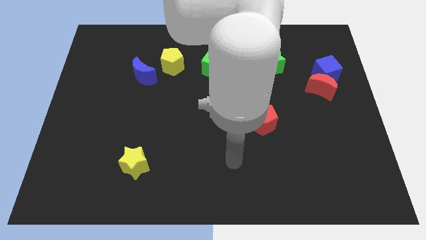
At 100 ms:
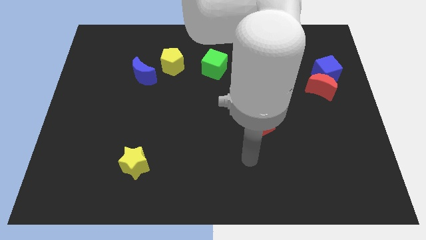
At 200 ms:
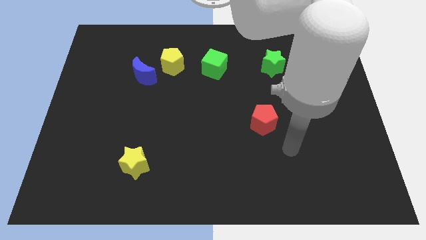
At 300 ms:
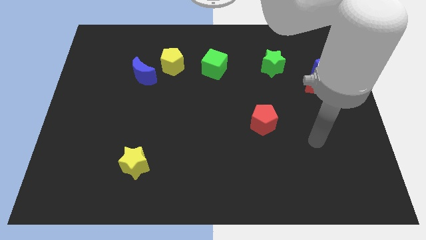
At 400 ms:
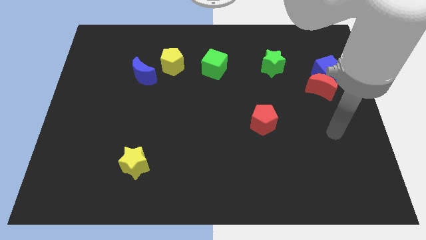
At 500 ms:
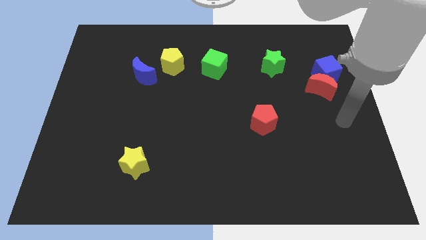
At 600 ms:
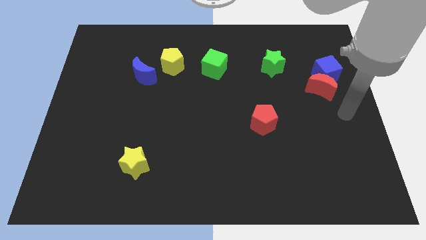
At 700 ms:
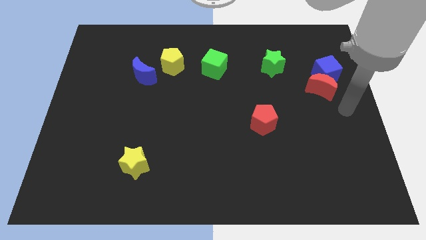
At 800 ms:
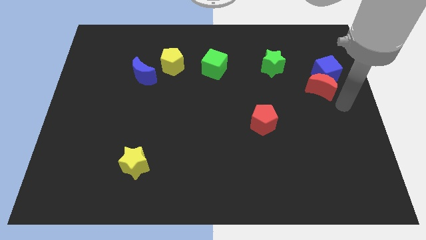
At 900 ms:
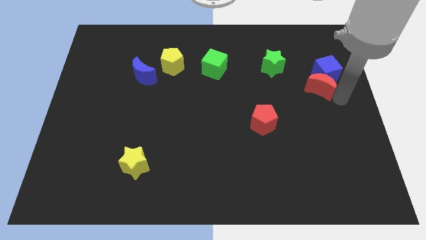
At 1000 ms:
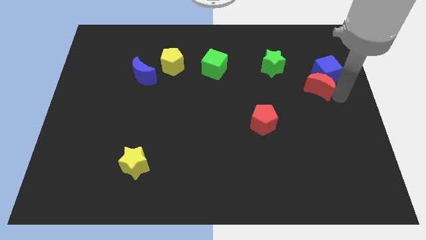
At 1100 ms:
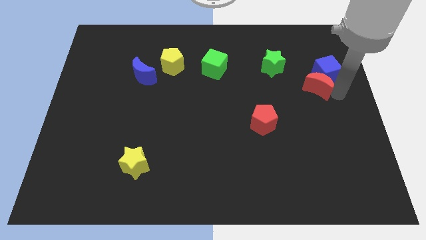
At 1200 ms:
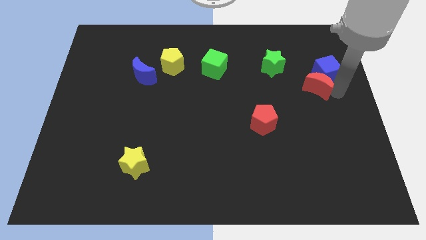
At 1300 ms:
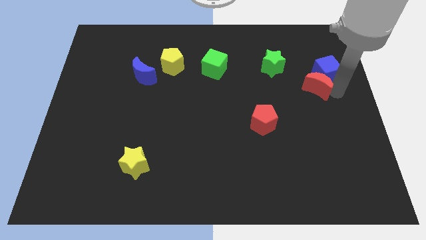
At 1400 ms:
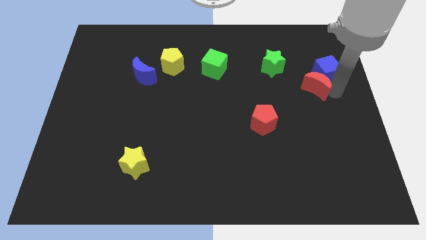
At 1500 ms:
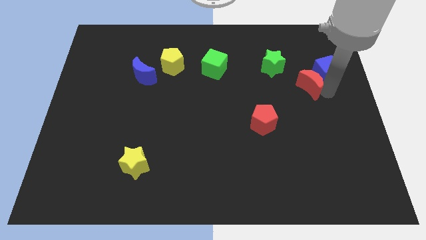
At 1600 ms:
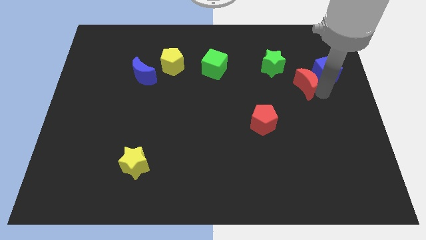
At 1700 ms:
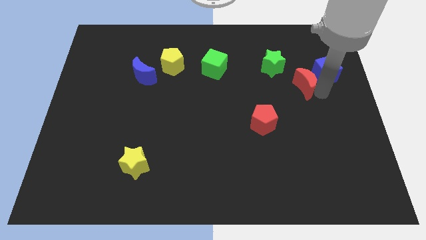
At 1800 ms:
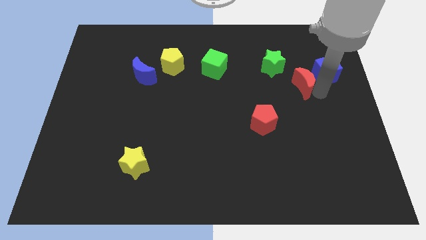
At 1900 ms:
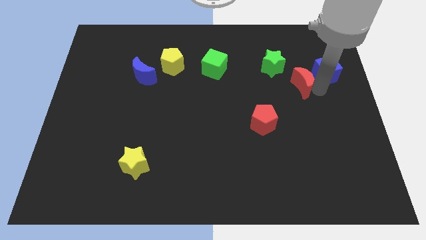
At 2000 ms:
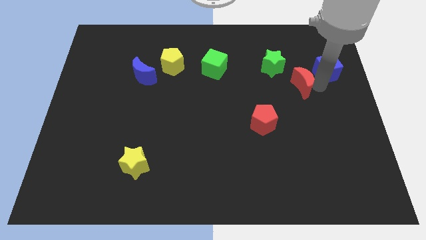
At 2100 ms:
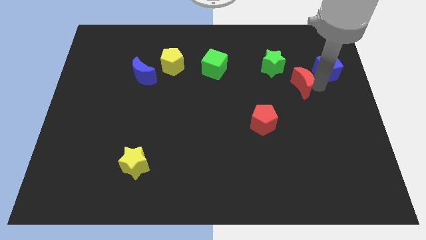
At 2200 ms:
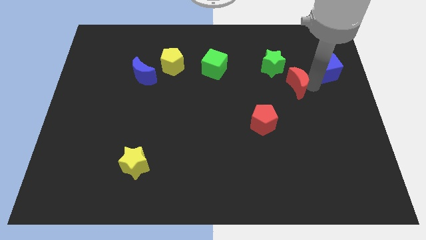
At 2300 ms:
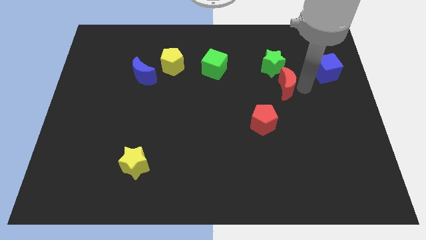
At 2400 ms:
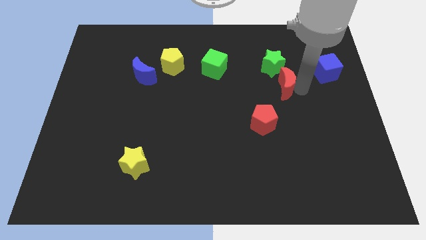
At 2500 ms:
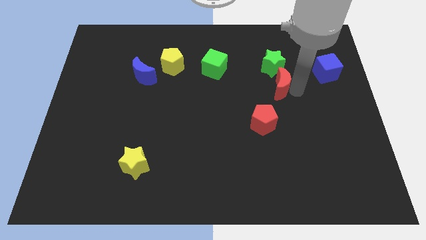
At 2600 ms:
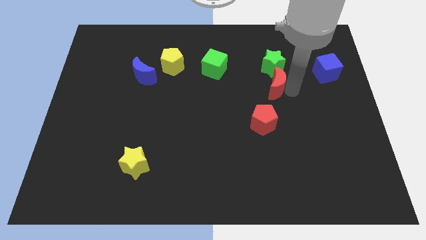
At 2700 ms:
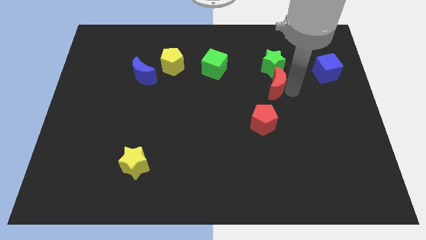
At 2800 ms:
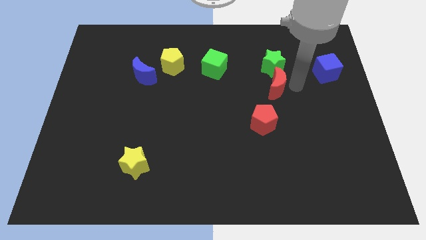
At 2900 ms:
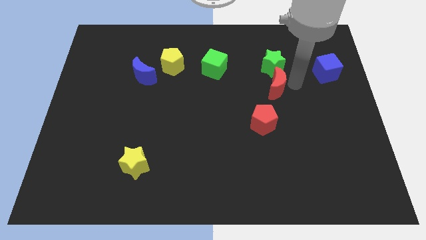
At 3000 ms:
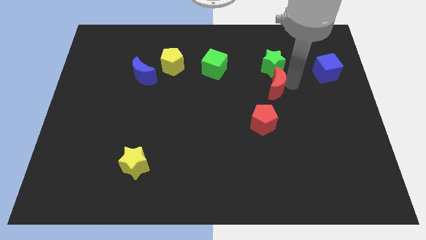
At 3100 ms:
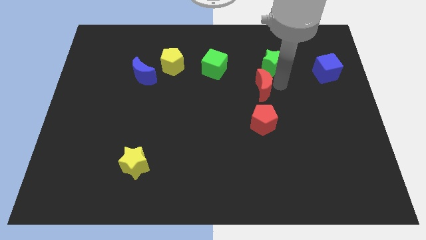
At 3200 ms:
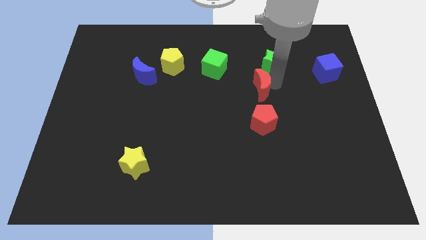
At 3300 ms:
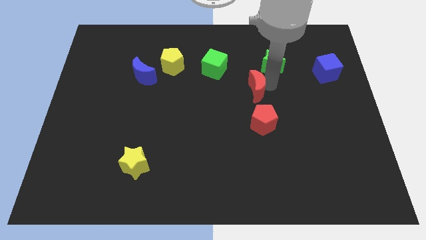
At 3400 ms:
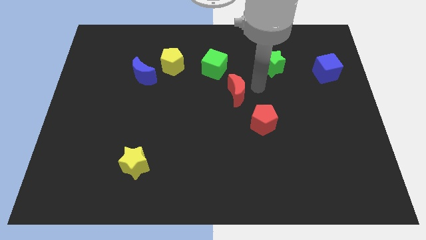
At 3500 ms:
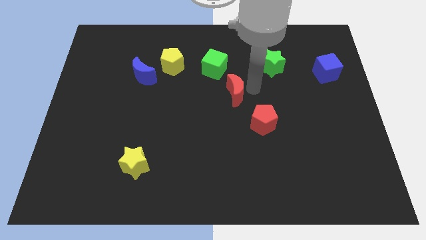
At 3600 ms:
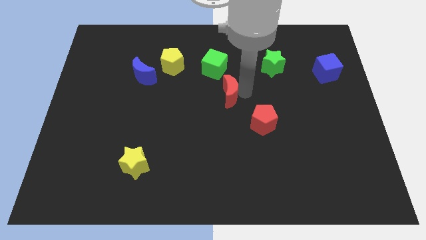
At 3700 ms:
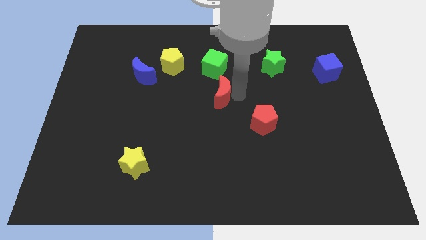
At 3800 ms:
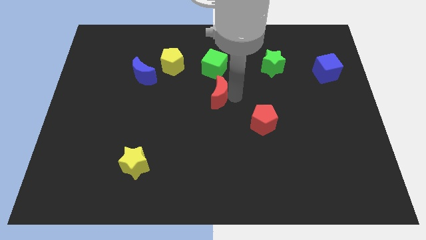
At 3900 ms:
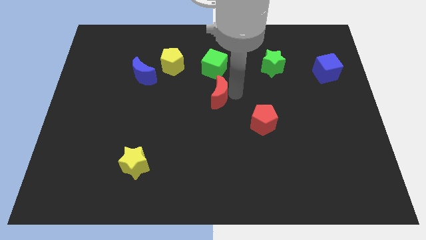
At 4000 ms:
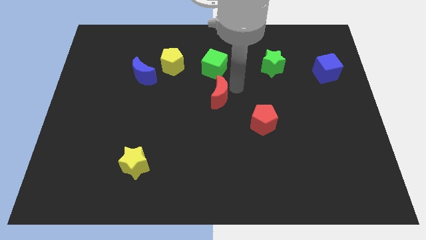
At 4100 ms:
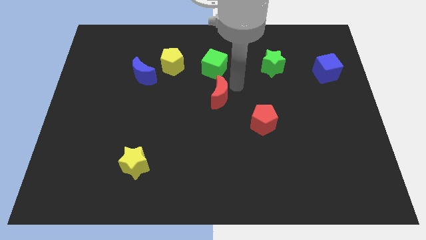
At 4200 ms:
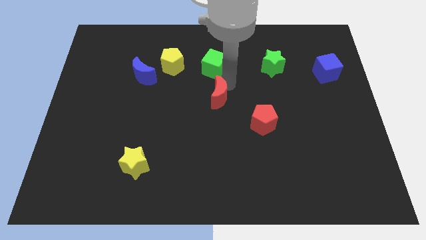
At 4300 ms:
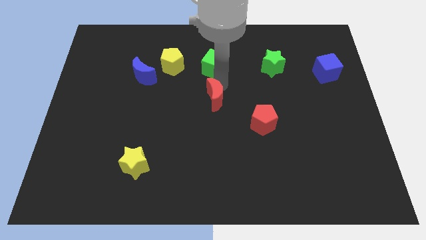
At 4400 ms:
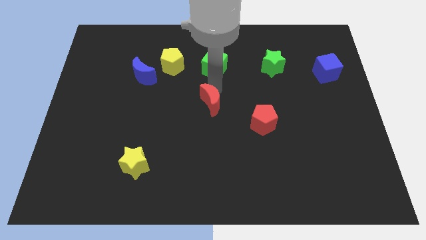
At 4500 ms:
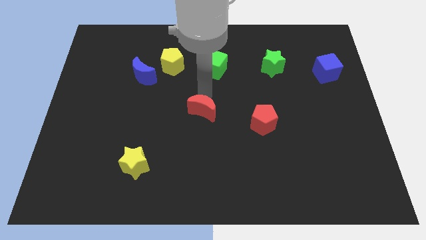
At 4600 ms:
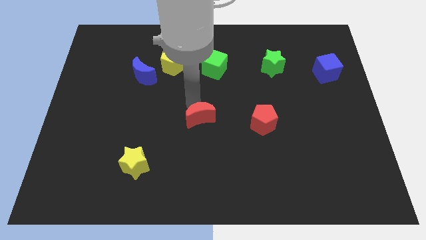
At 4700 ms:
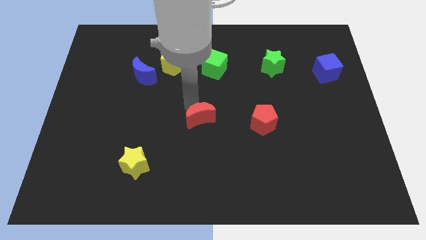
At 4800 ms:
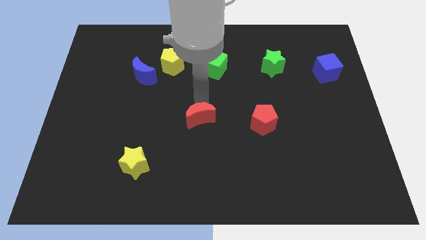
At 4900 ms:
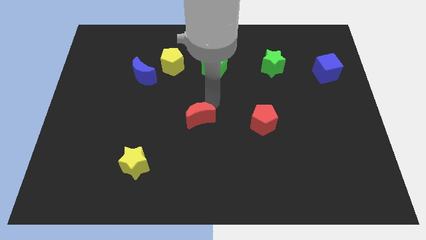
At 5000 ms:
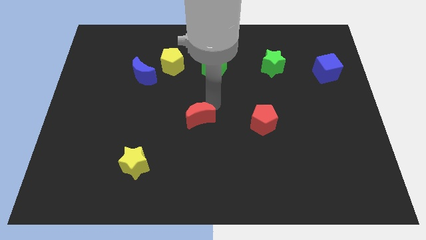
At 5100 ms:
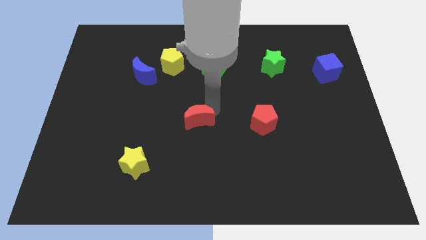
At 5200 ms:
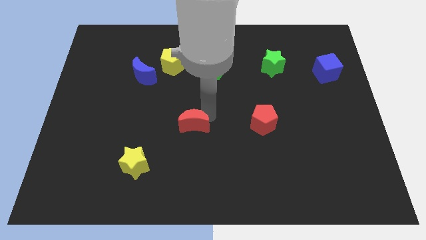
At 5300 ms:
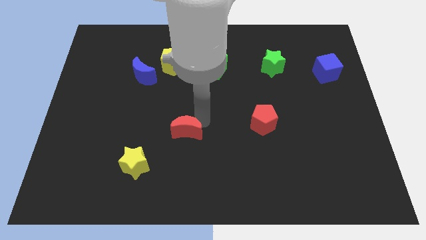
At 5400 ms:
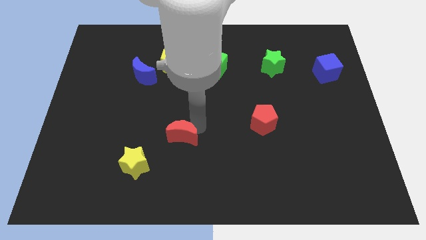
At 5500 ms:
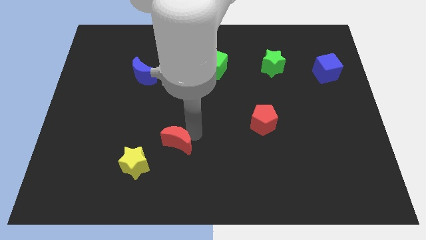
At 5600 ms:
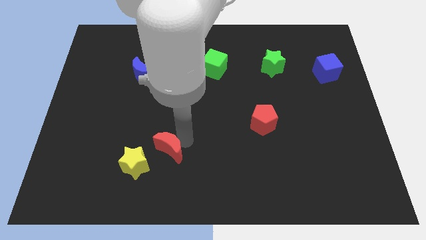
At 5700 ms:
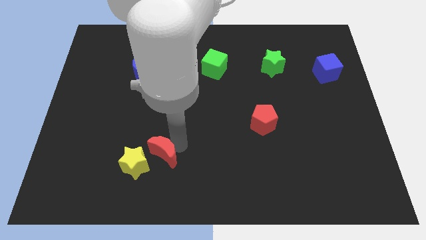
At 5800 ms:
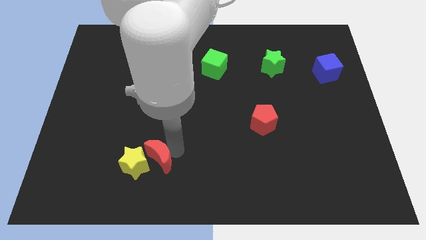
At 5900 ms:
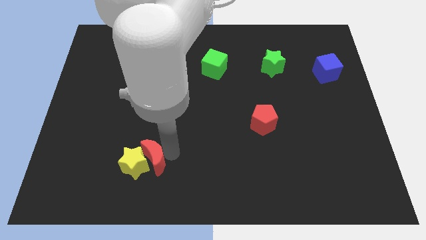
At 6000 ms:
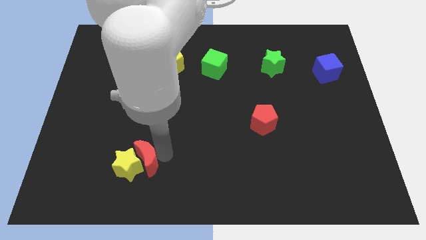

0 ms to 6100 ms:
put the red moon to the yellow star

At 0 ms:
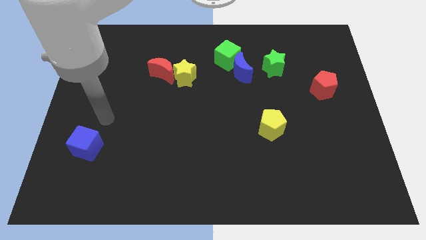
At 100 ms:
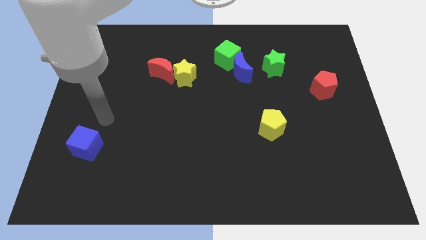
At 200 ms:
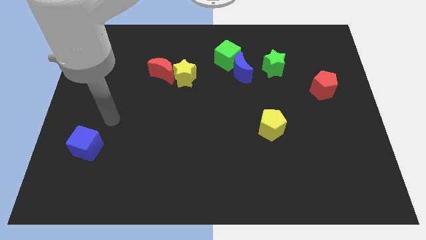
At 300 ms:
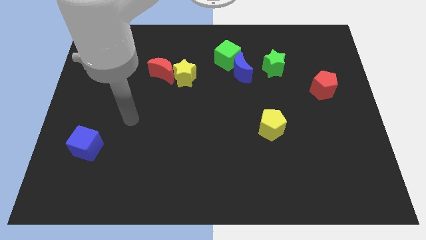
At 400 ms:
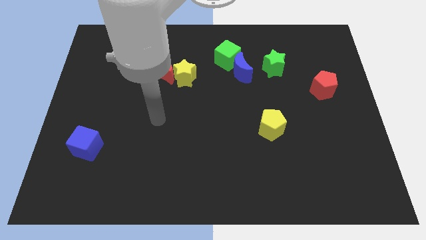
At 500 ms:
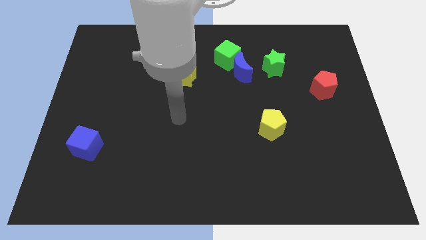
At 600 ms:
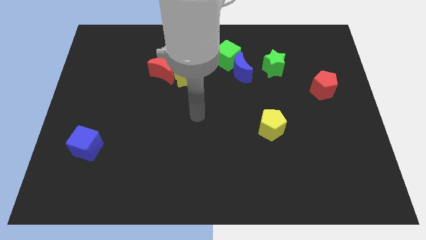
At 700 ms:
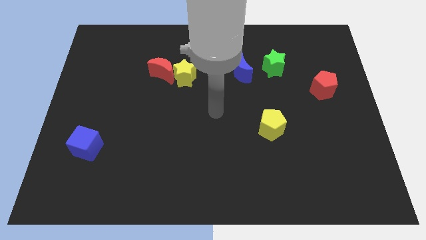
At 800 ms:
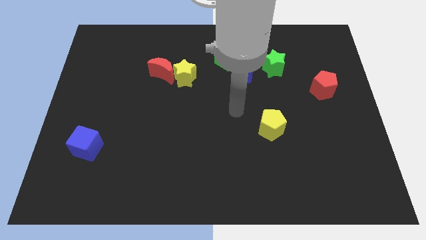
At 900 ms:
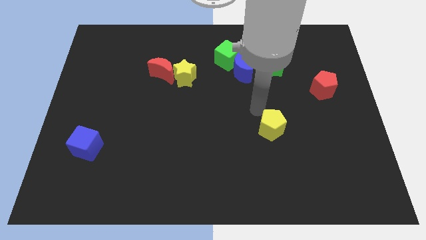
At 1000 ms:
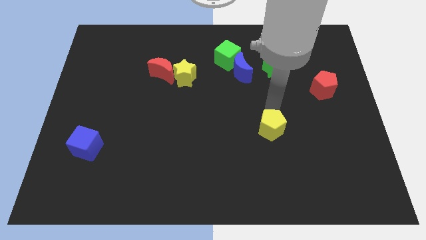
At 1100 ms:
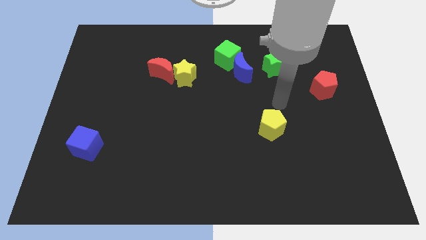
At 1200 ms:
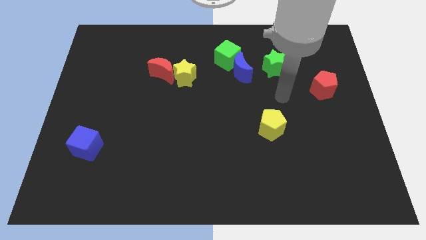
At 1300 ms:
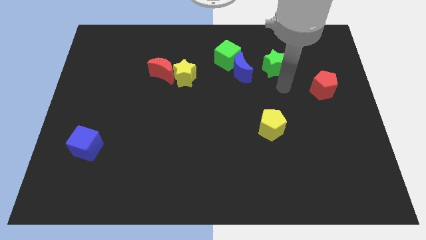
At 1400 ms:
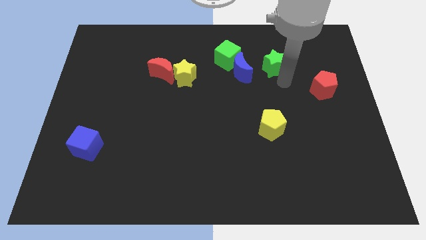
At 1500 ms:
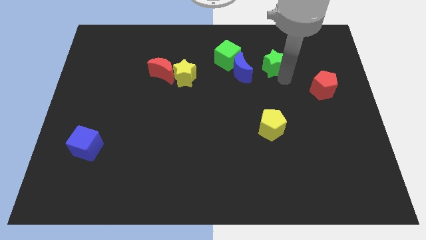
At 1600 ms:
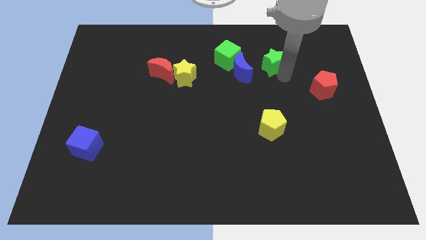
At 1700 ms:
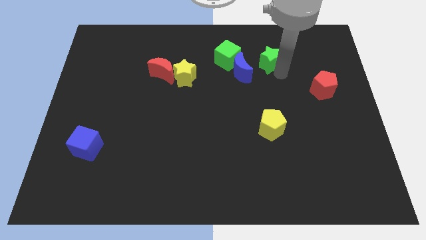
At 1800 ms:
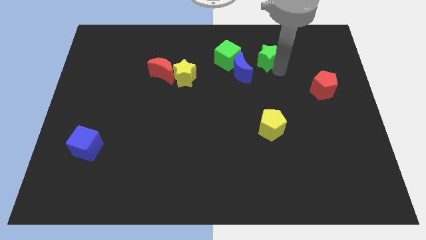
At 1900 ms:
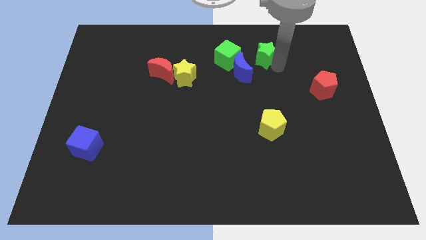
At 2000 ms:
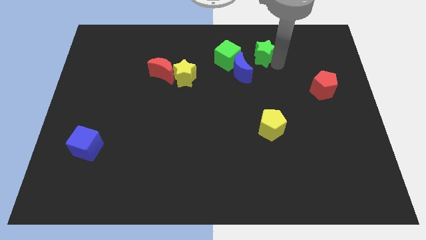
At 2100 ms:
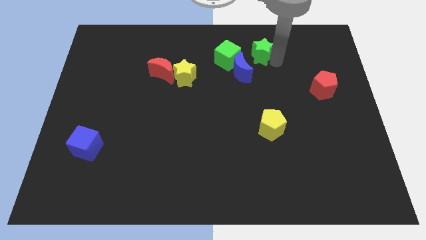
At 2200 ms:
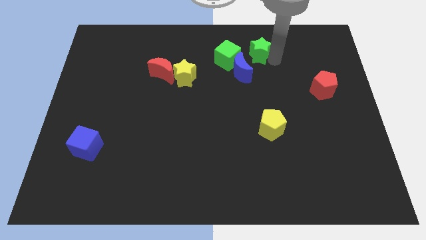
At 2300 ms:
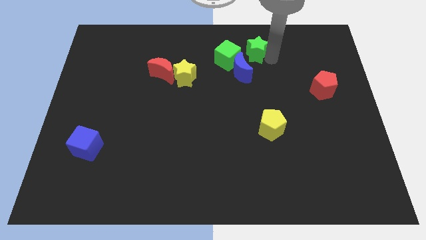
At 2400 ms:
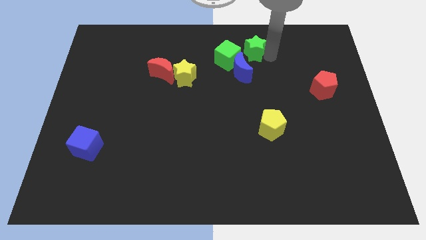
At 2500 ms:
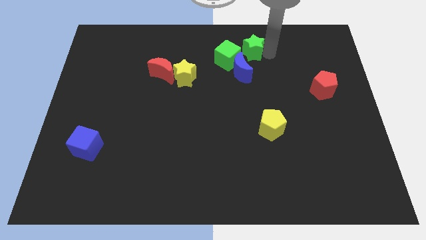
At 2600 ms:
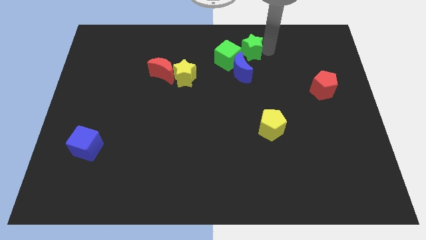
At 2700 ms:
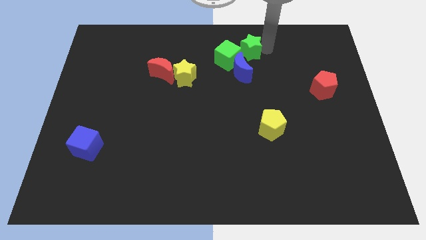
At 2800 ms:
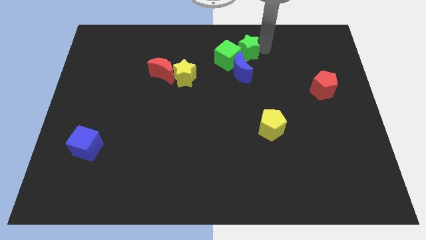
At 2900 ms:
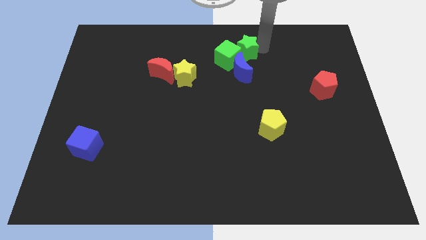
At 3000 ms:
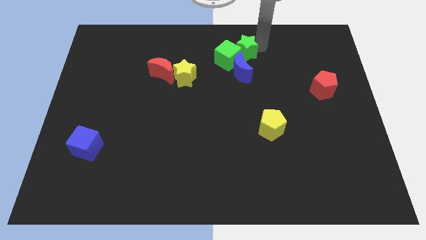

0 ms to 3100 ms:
push the green star next to the green cube
